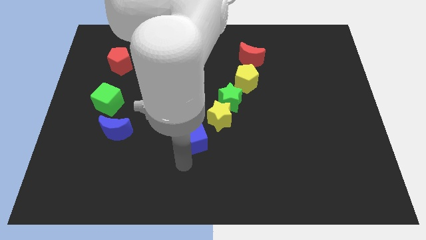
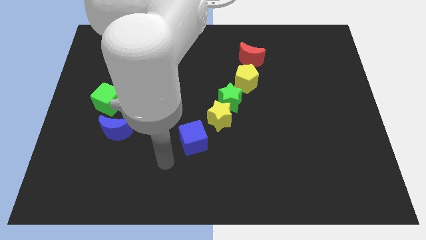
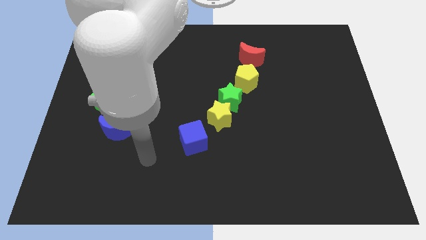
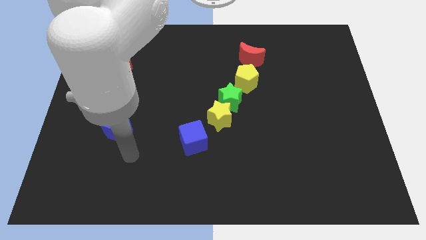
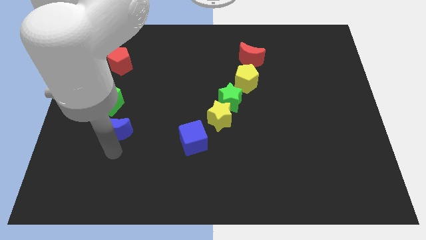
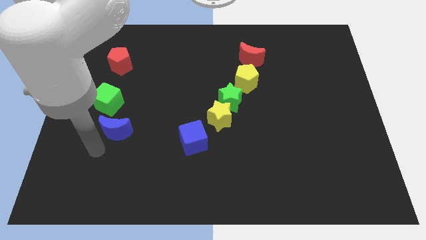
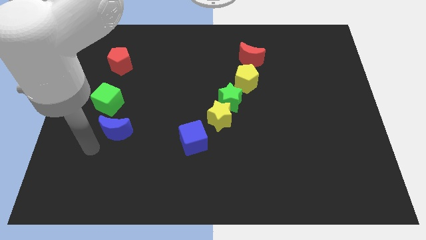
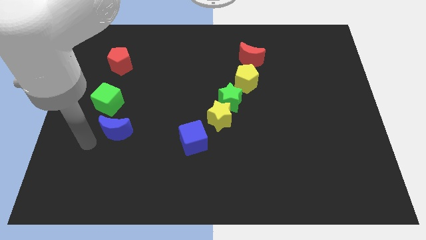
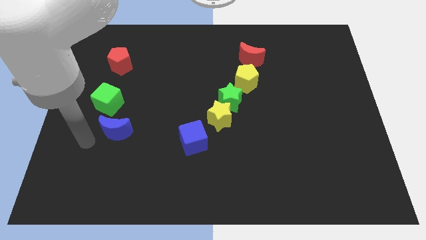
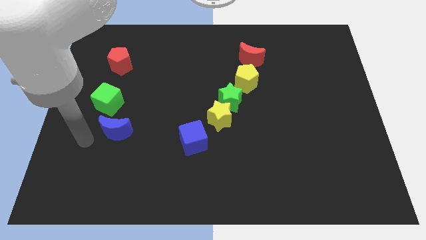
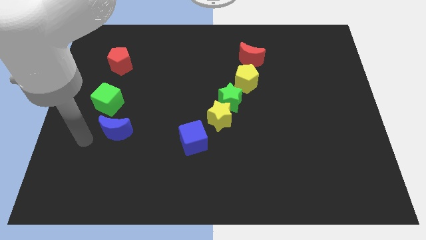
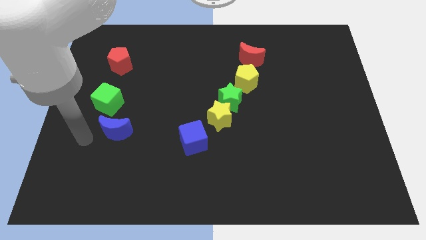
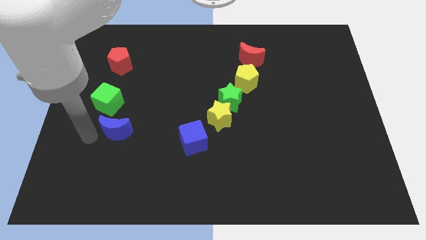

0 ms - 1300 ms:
point your arm at the bottom left side of blue moon

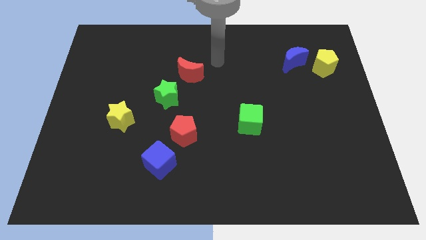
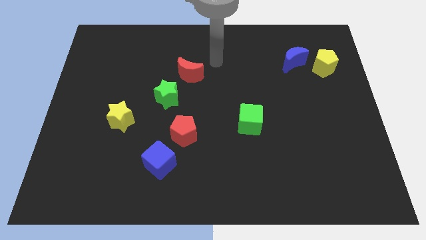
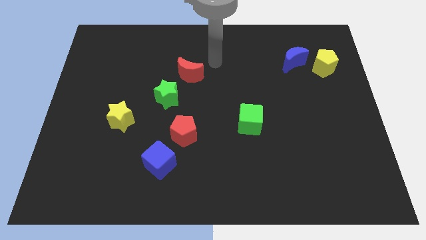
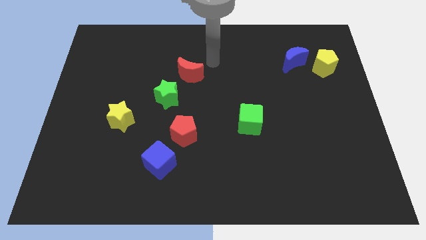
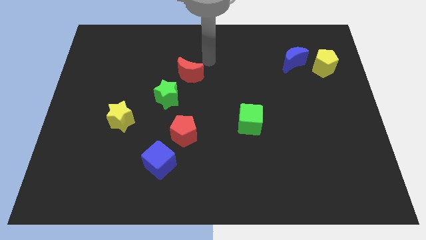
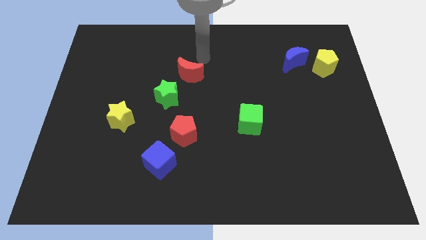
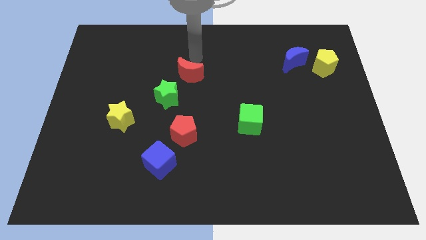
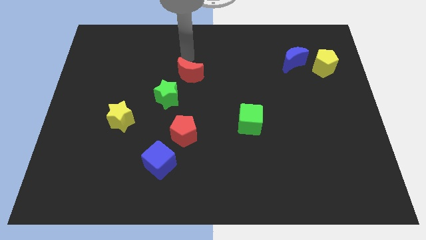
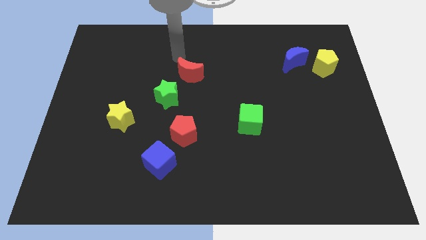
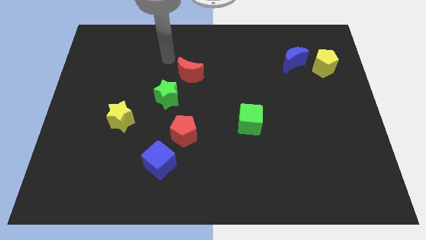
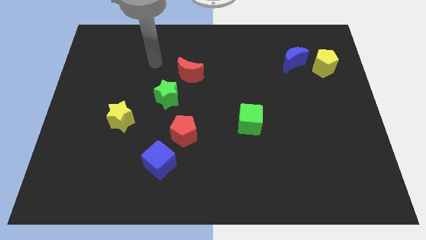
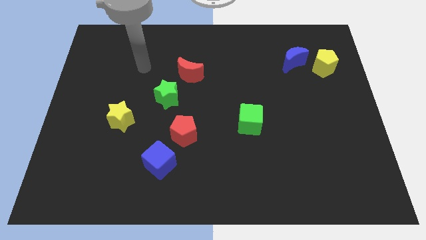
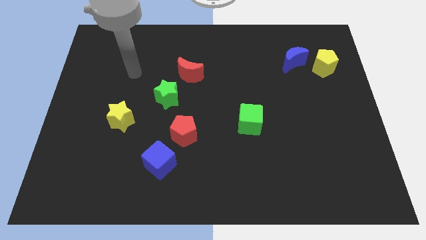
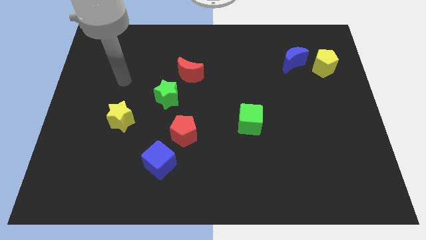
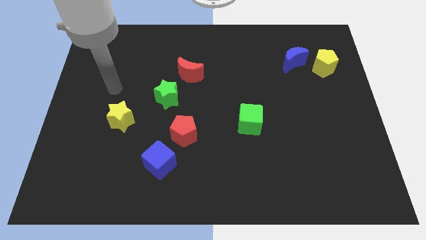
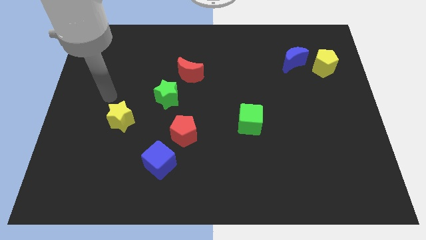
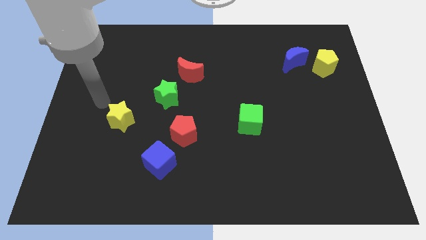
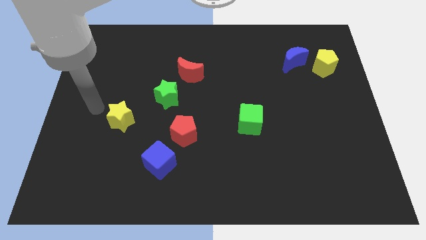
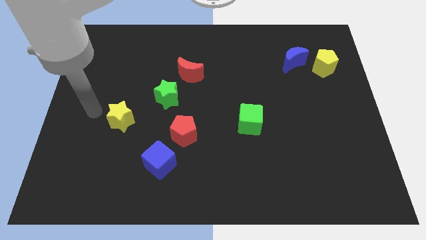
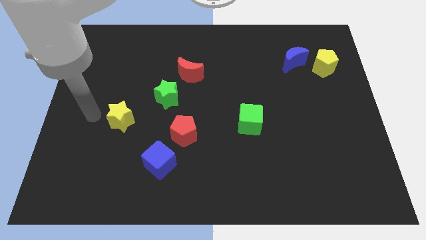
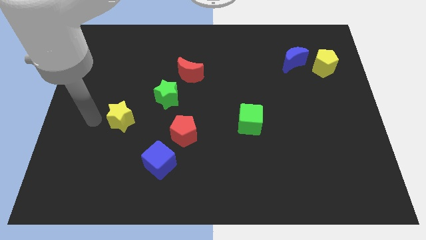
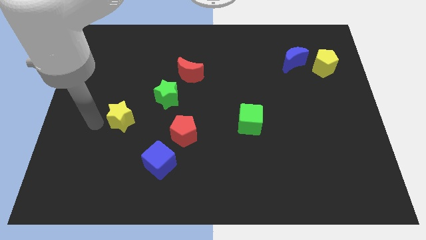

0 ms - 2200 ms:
move your arm to the bottom left side of the yellow star

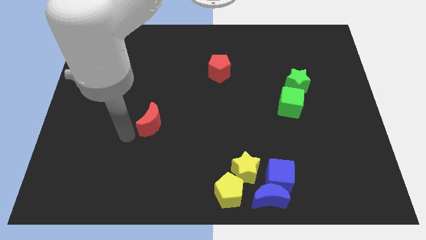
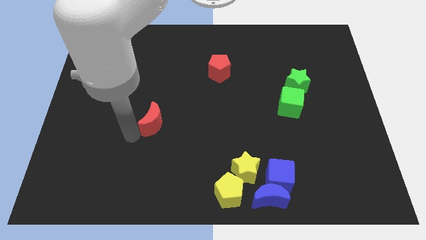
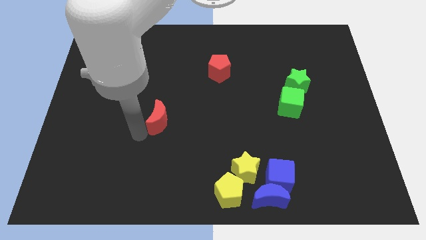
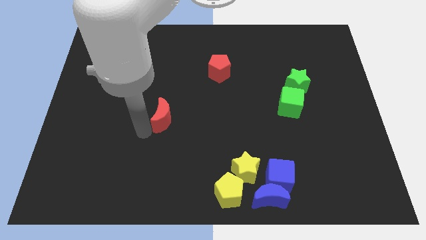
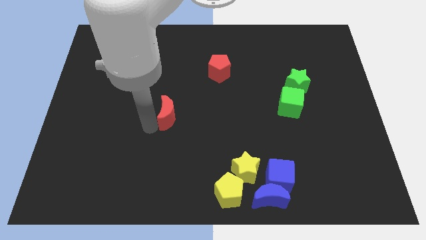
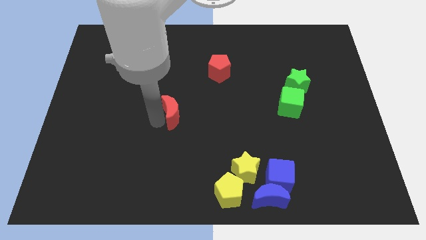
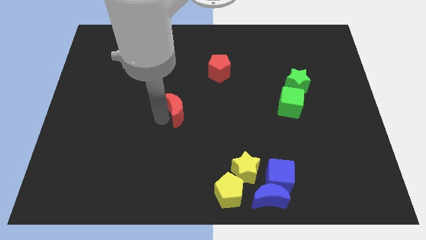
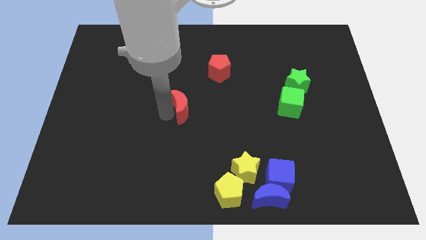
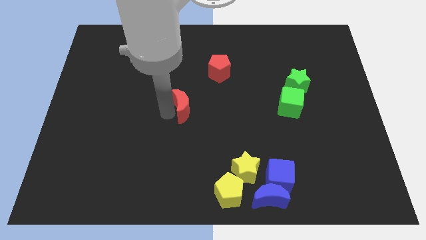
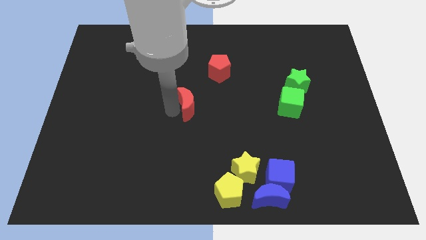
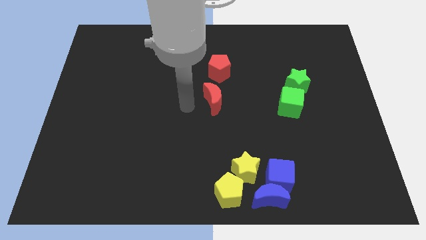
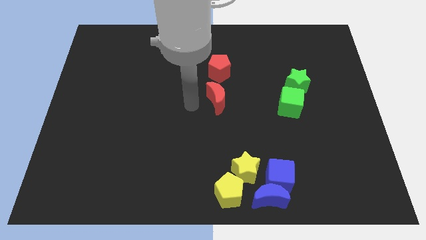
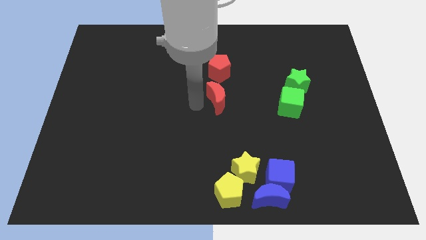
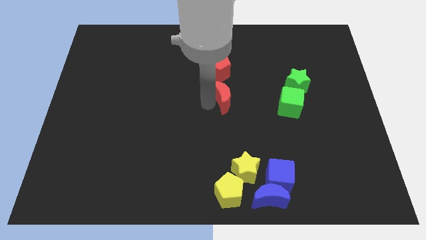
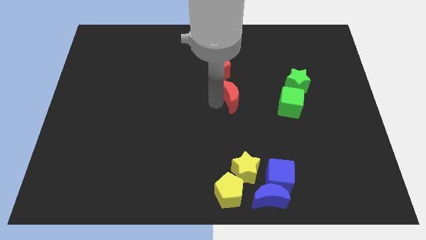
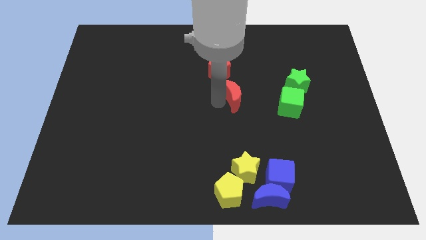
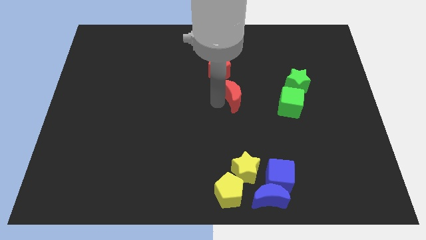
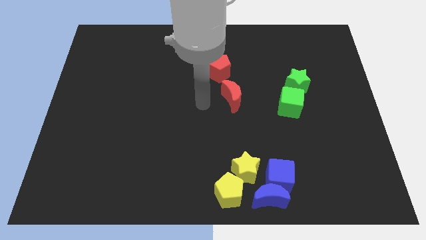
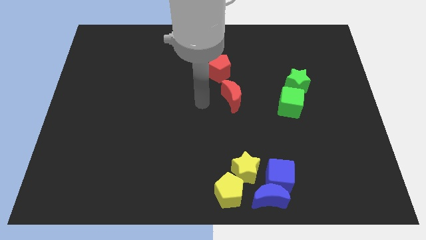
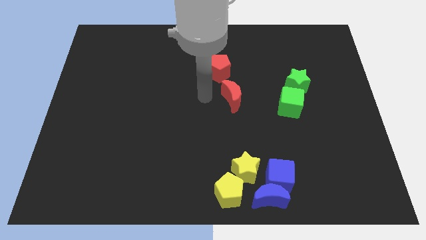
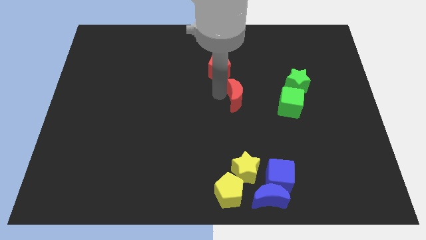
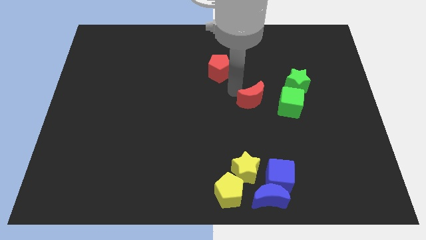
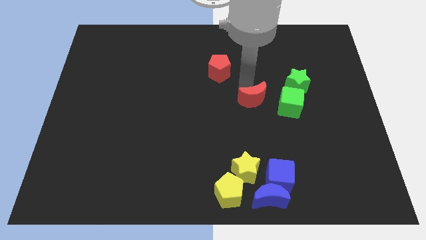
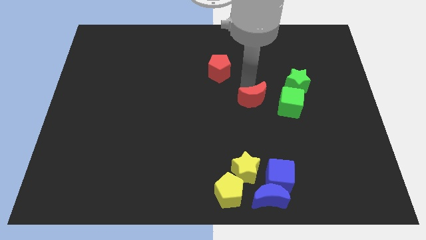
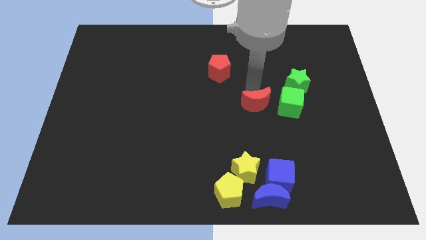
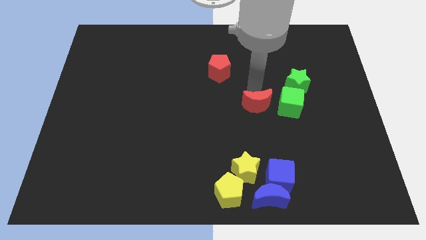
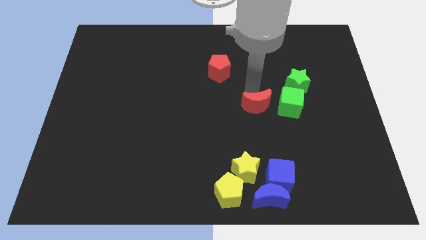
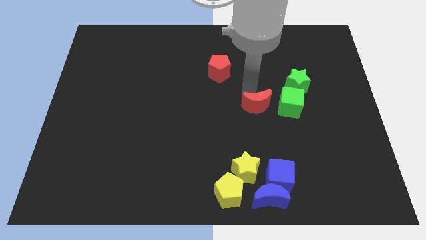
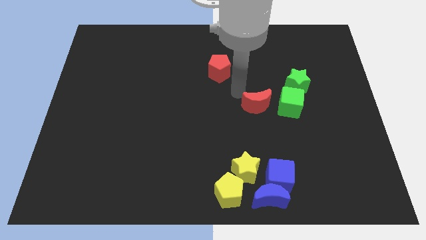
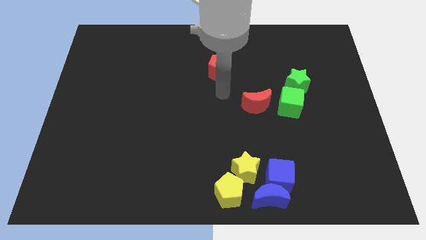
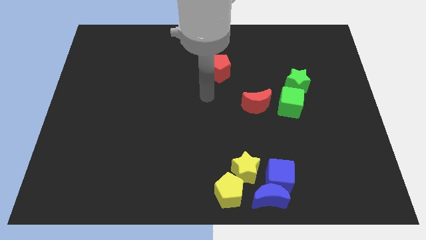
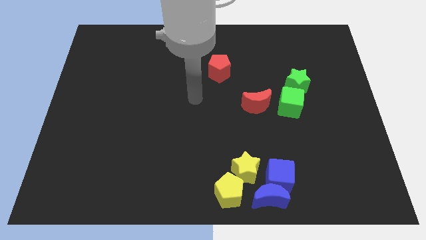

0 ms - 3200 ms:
move the red crescent to the left side of the green cube

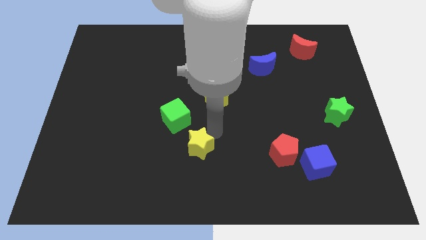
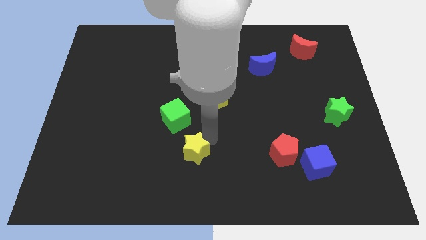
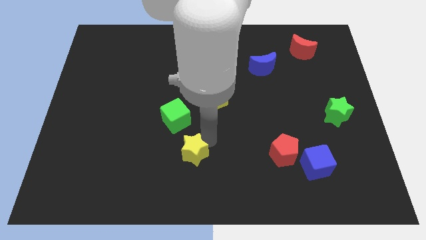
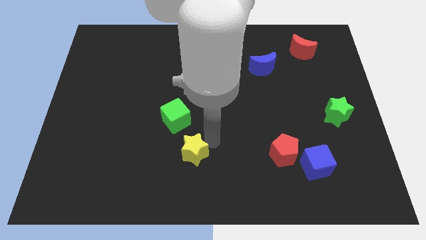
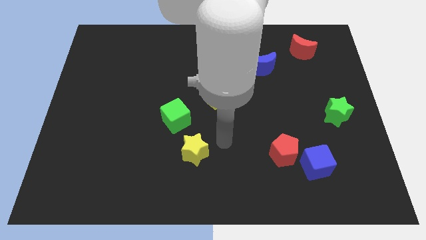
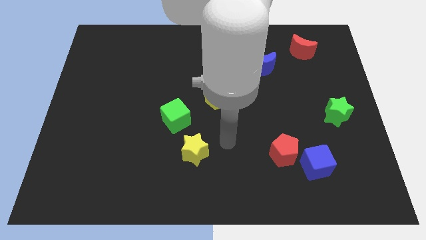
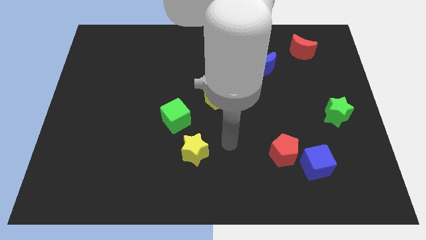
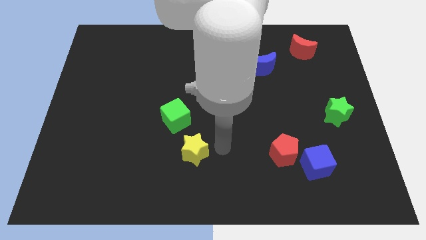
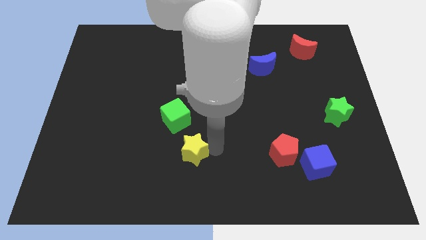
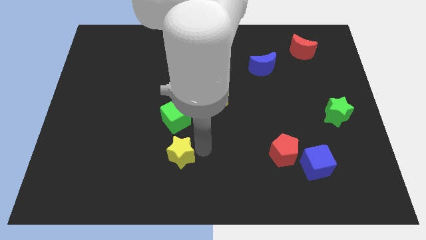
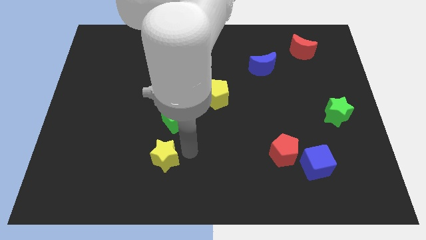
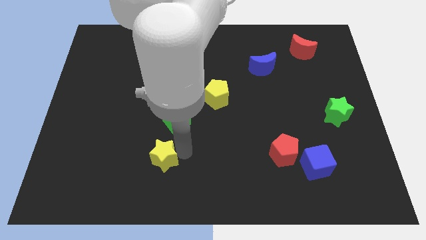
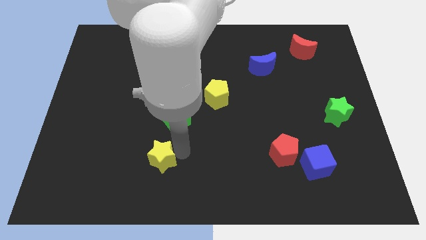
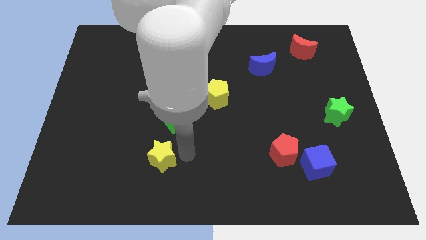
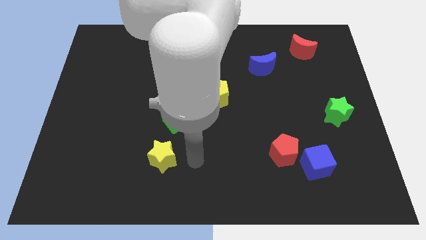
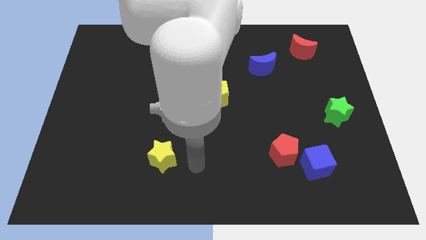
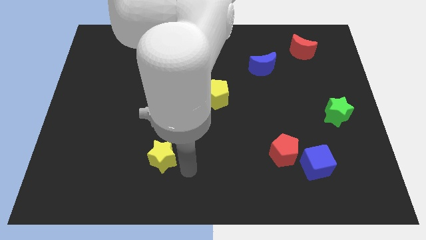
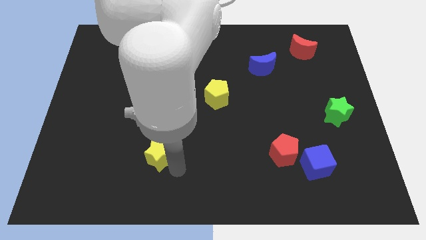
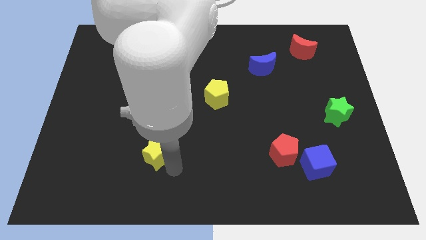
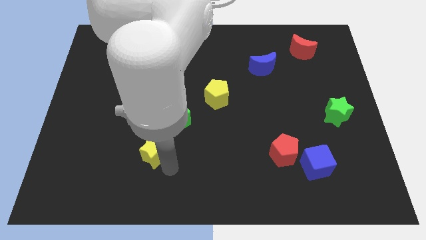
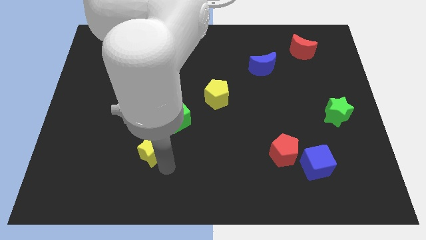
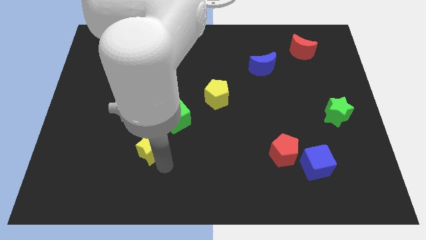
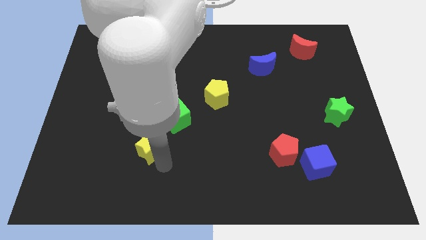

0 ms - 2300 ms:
move the yellow star to the bottom left of the green cube
